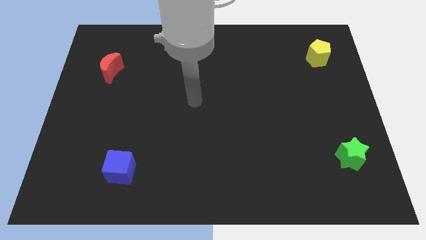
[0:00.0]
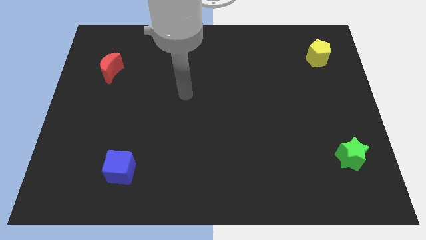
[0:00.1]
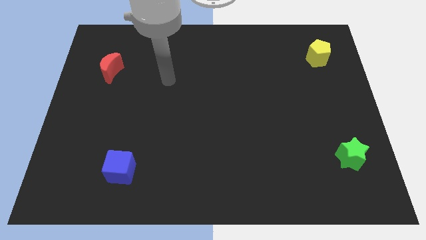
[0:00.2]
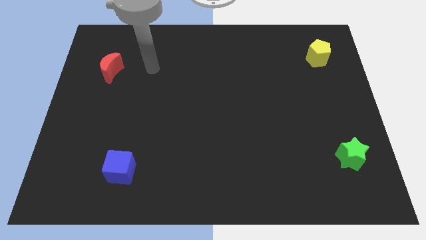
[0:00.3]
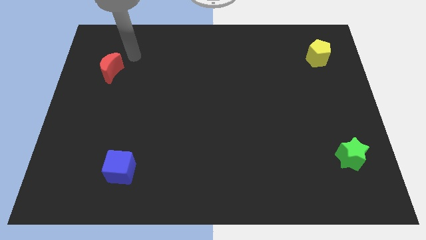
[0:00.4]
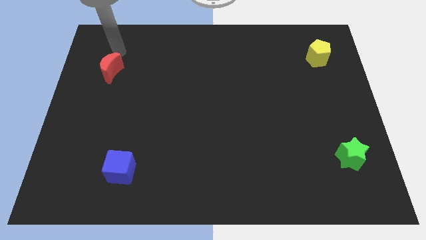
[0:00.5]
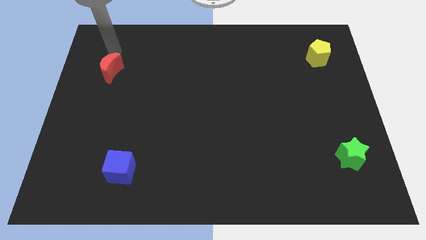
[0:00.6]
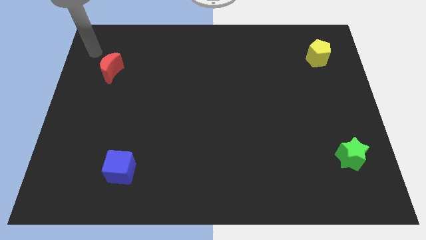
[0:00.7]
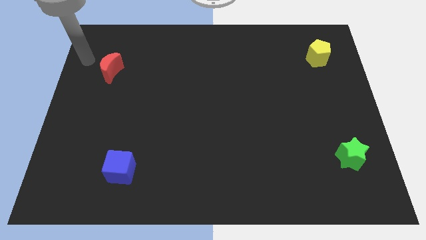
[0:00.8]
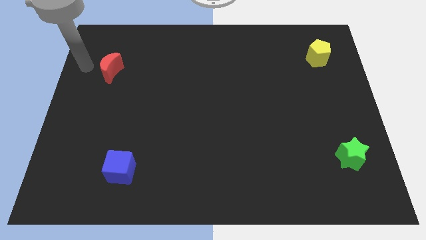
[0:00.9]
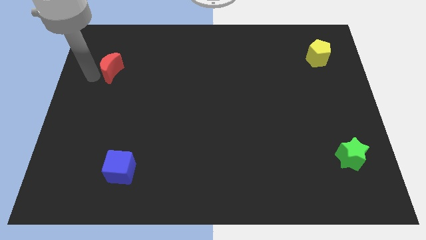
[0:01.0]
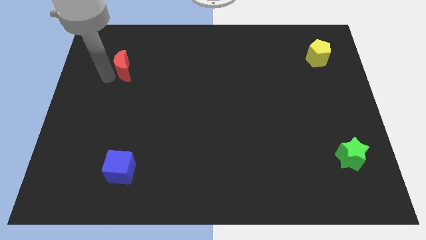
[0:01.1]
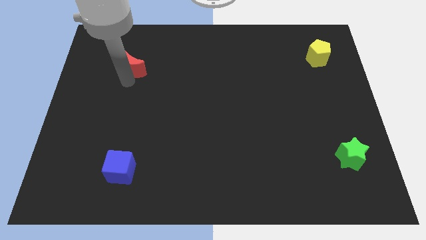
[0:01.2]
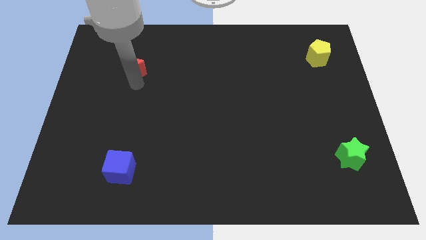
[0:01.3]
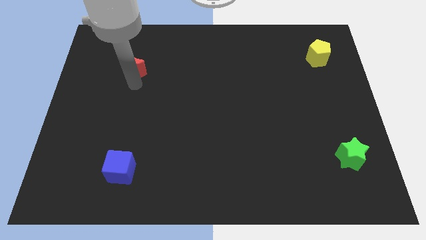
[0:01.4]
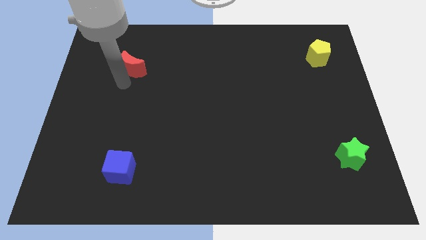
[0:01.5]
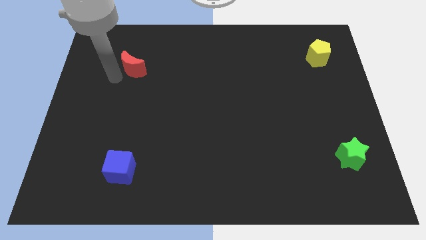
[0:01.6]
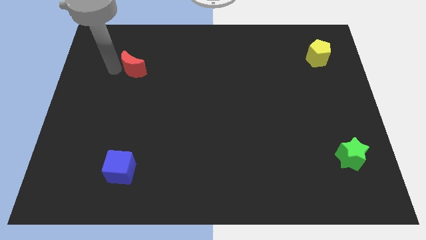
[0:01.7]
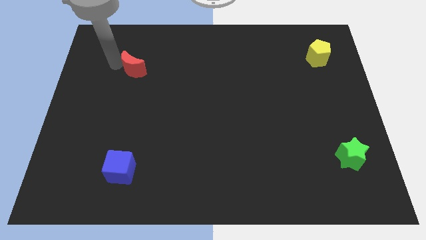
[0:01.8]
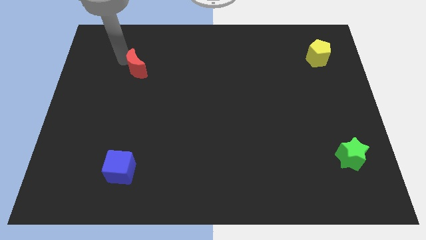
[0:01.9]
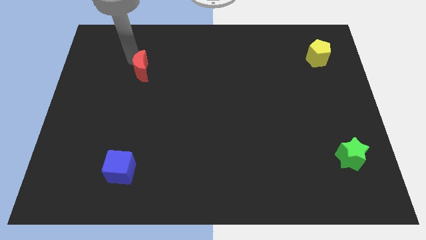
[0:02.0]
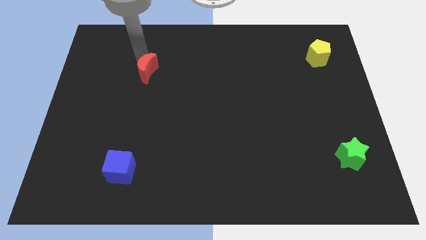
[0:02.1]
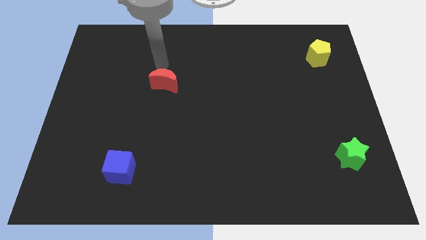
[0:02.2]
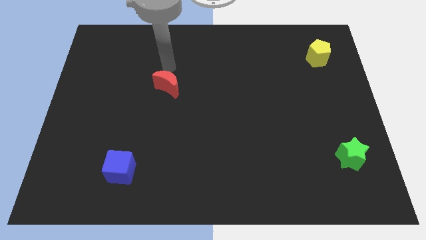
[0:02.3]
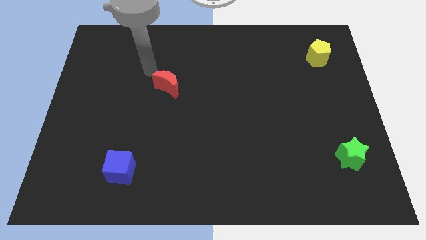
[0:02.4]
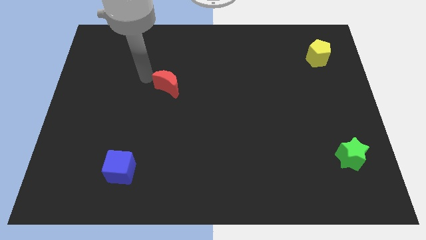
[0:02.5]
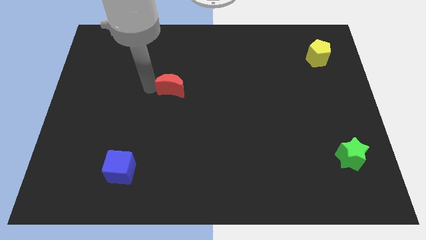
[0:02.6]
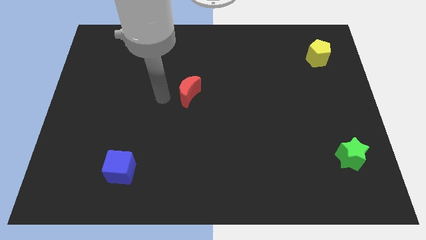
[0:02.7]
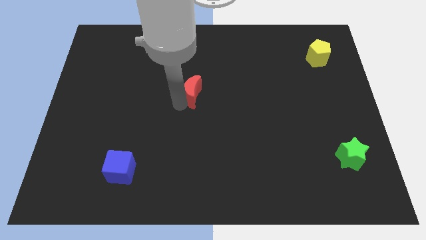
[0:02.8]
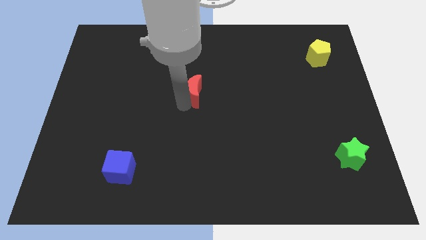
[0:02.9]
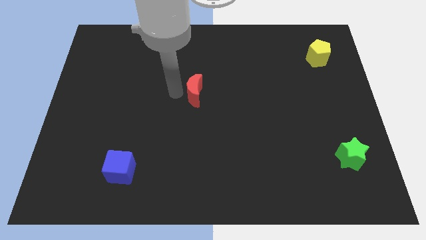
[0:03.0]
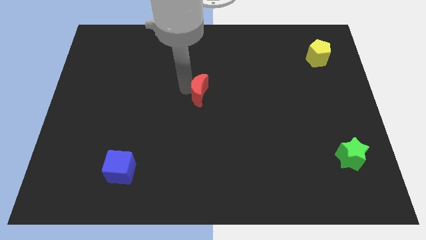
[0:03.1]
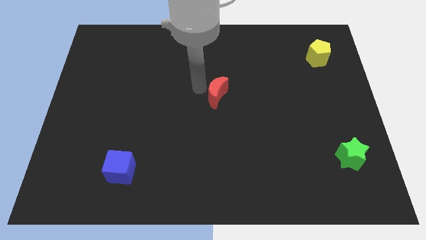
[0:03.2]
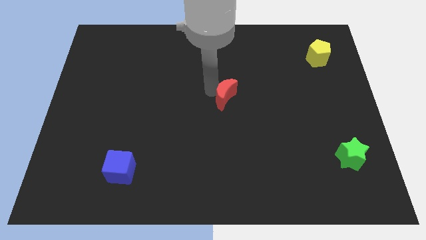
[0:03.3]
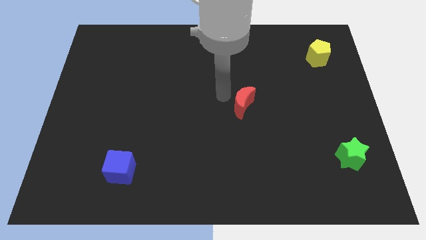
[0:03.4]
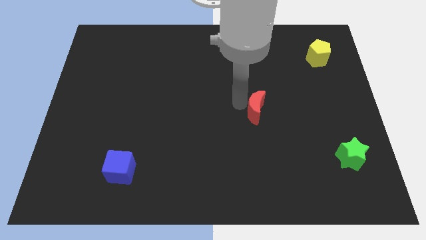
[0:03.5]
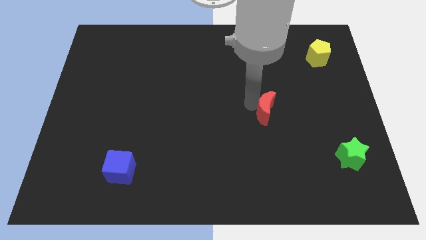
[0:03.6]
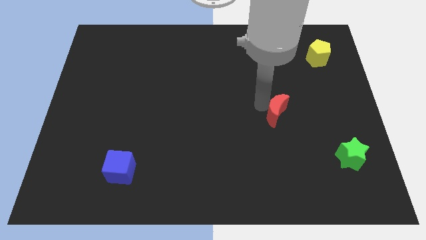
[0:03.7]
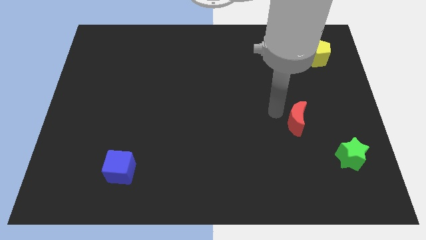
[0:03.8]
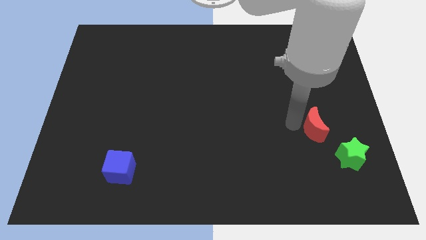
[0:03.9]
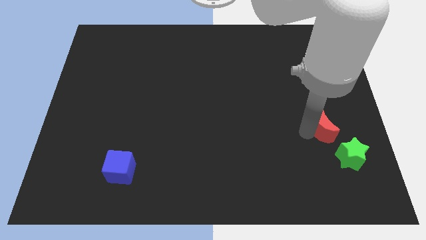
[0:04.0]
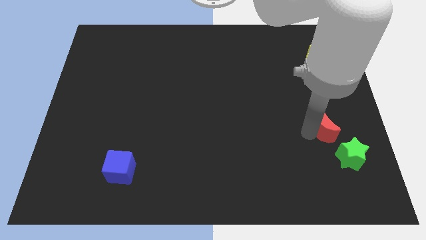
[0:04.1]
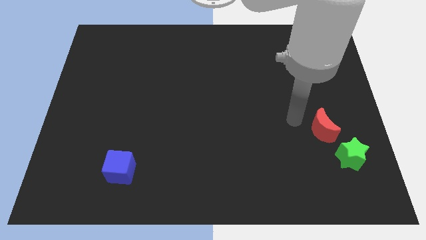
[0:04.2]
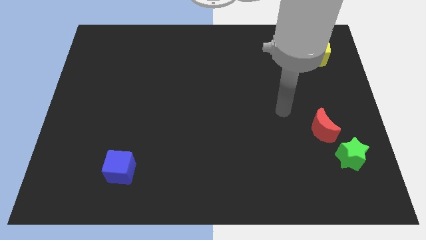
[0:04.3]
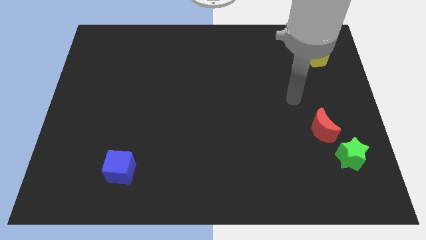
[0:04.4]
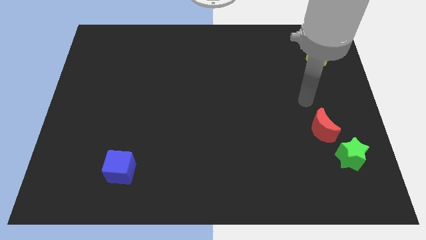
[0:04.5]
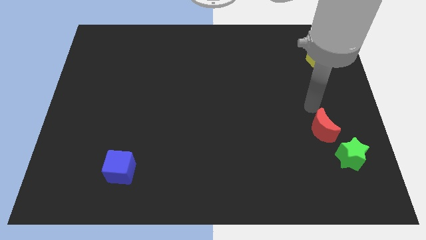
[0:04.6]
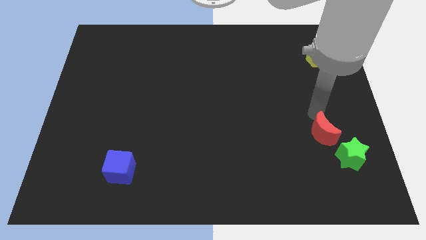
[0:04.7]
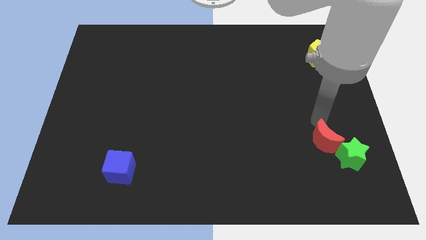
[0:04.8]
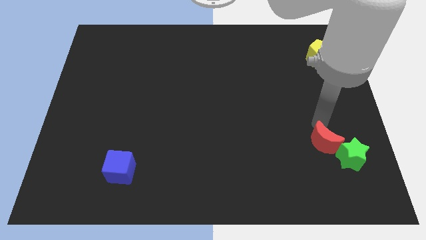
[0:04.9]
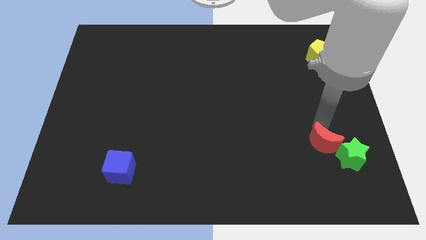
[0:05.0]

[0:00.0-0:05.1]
push the red block to the green block

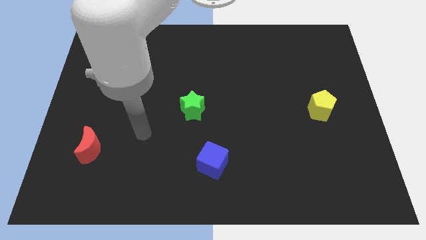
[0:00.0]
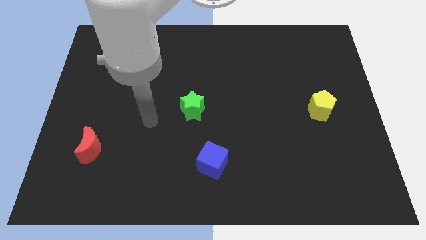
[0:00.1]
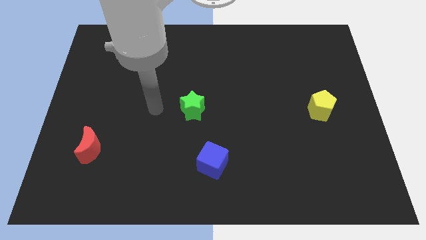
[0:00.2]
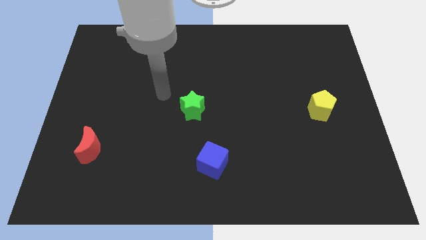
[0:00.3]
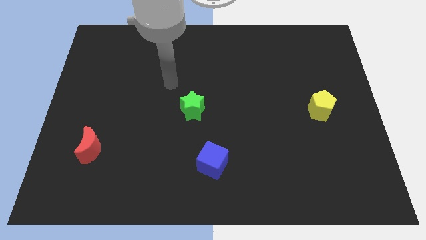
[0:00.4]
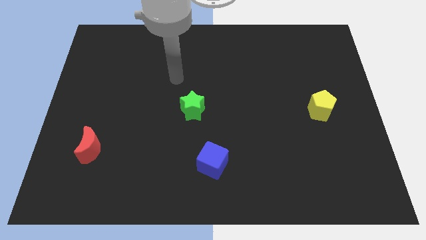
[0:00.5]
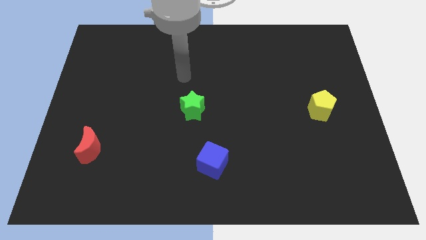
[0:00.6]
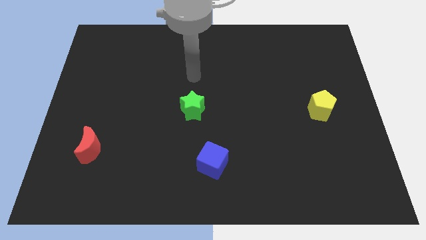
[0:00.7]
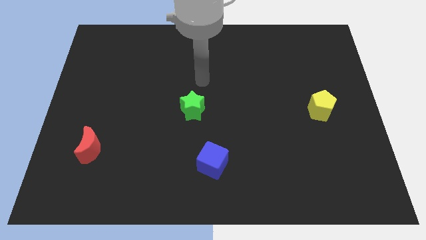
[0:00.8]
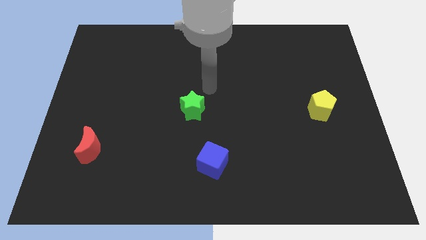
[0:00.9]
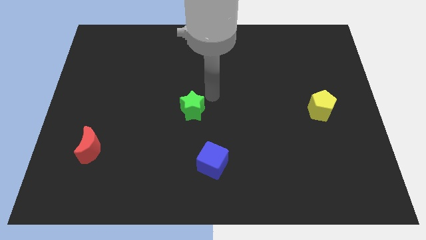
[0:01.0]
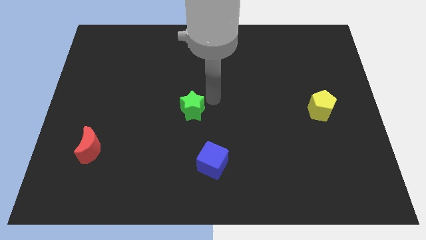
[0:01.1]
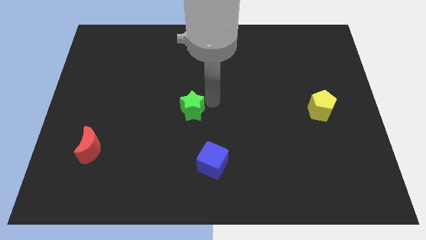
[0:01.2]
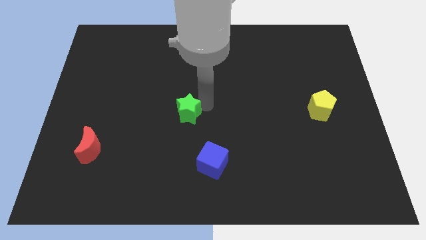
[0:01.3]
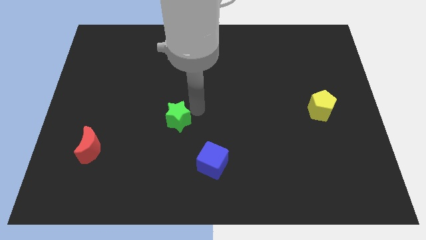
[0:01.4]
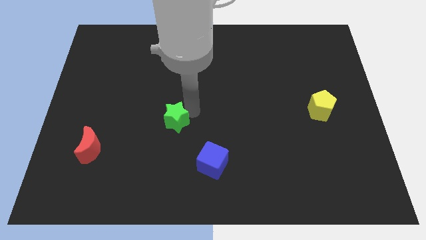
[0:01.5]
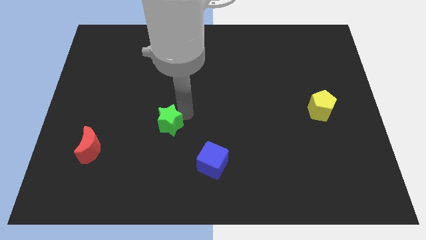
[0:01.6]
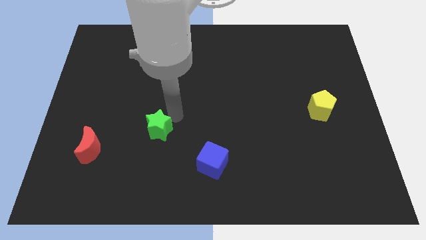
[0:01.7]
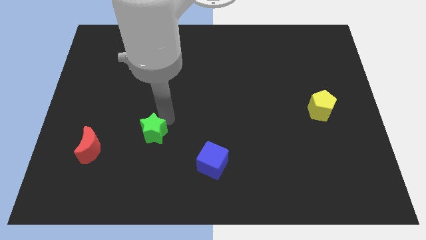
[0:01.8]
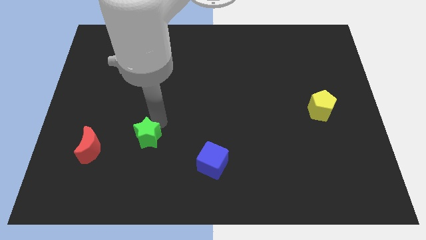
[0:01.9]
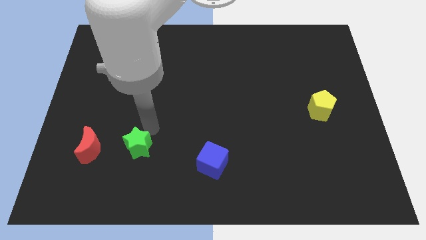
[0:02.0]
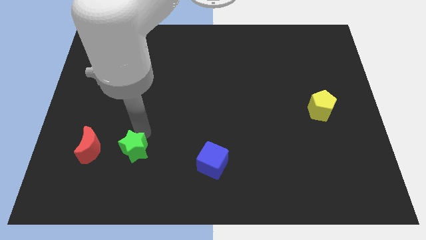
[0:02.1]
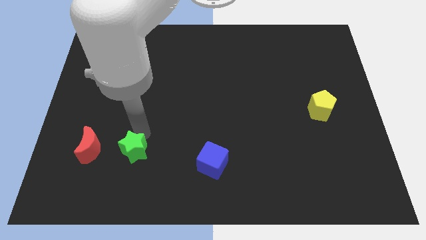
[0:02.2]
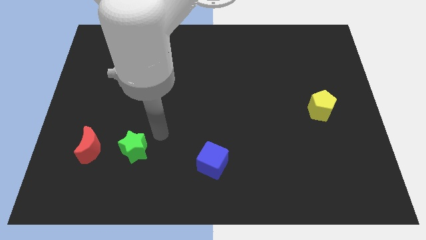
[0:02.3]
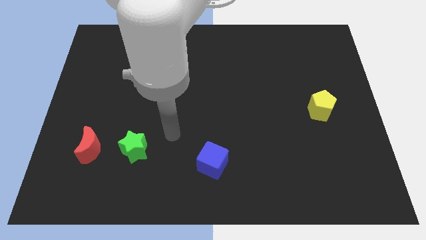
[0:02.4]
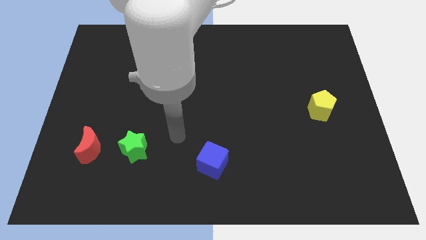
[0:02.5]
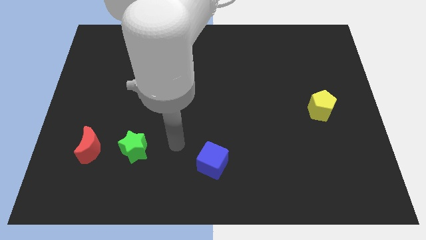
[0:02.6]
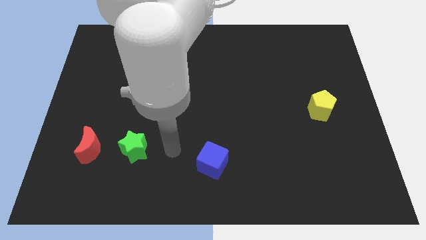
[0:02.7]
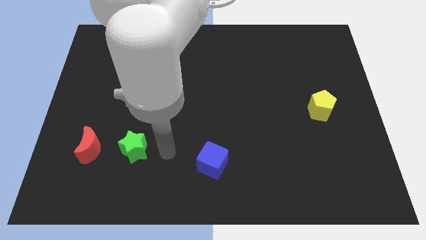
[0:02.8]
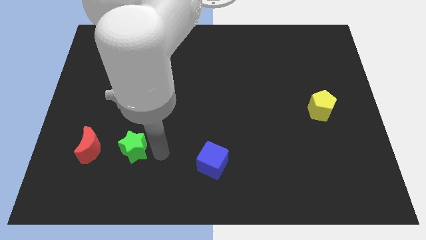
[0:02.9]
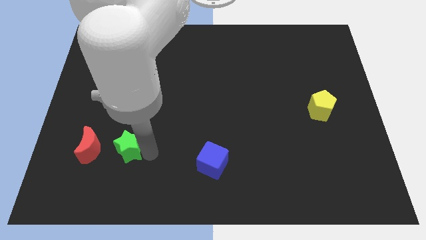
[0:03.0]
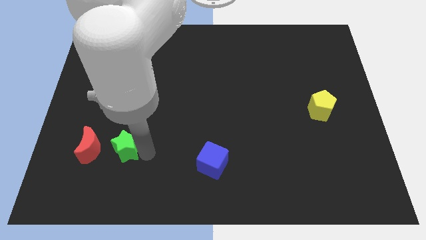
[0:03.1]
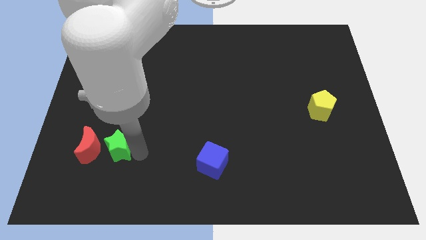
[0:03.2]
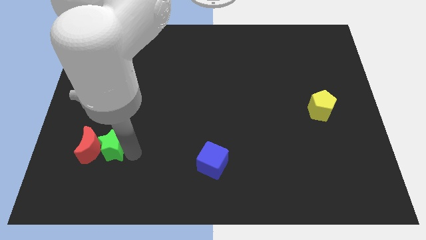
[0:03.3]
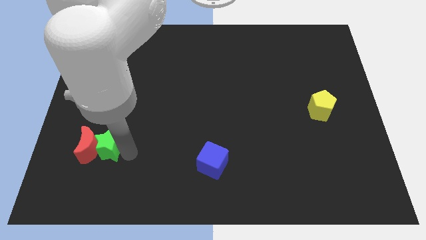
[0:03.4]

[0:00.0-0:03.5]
push the star next to the red block

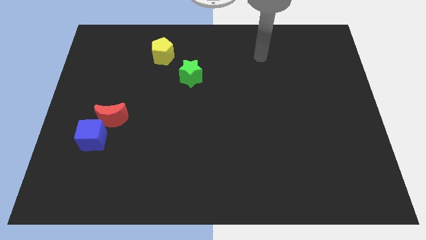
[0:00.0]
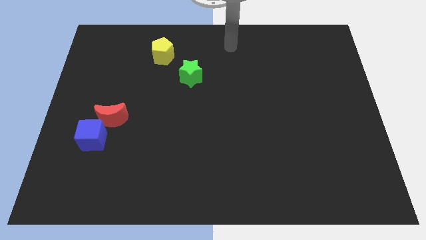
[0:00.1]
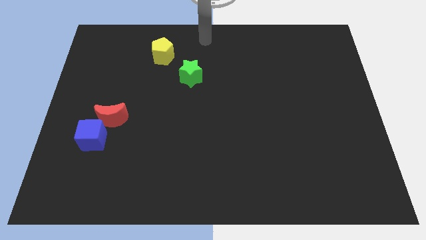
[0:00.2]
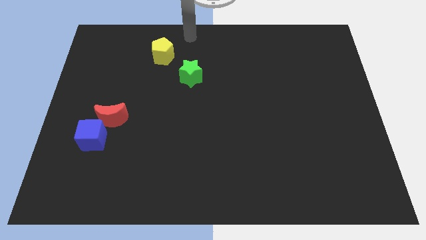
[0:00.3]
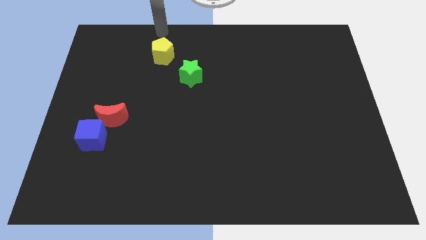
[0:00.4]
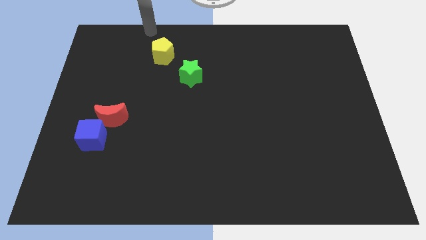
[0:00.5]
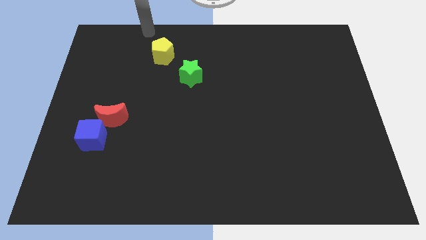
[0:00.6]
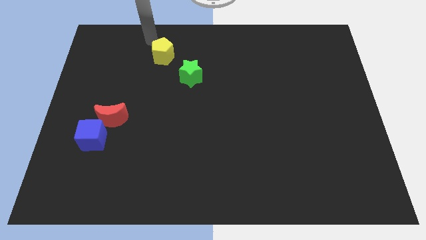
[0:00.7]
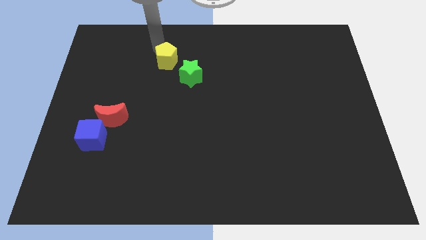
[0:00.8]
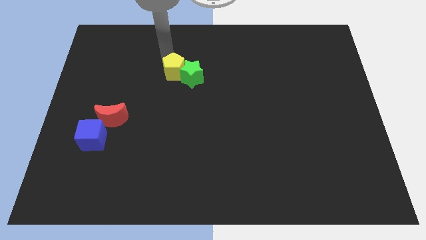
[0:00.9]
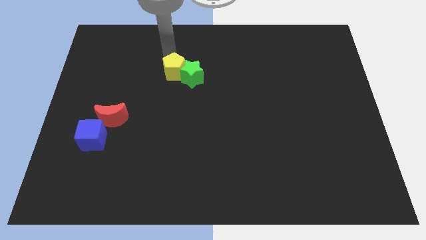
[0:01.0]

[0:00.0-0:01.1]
put the yellow block towards the green block
